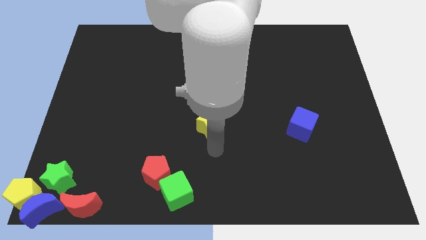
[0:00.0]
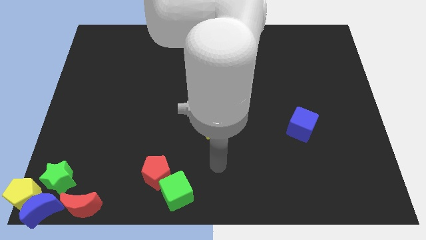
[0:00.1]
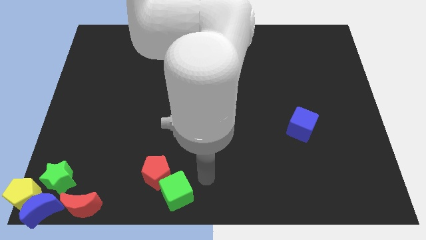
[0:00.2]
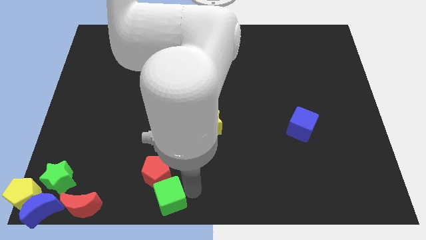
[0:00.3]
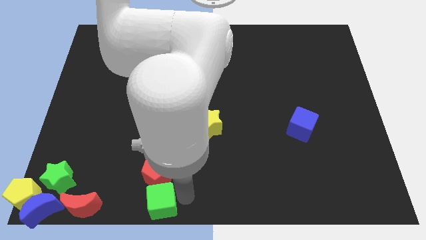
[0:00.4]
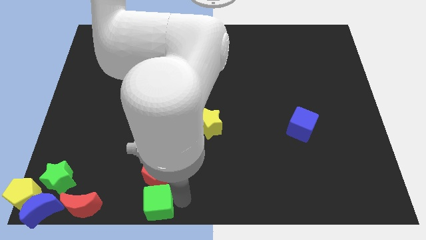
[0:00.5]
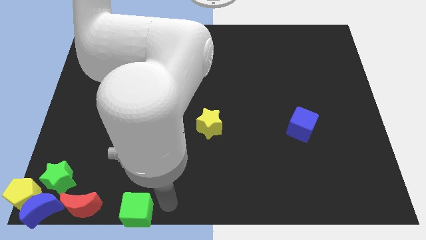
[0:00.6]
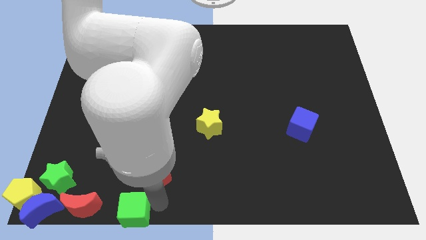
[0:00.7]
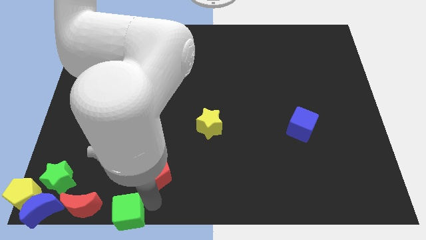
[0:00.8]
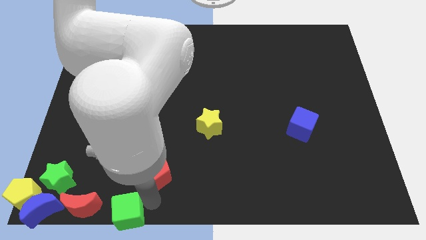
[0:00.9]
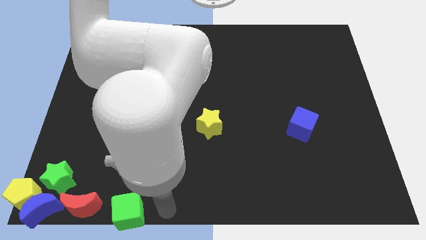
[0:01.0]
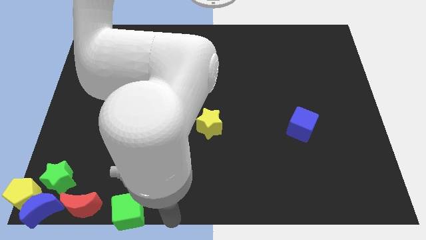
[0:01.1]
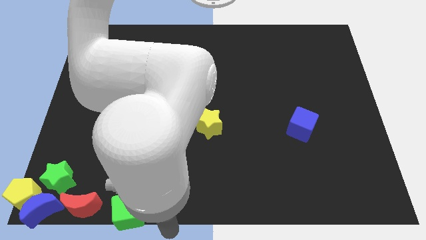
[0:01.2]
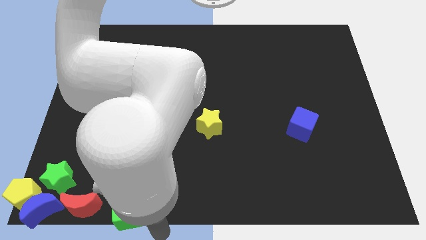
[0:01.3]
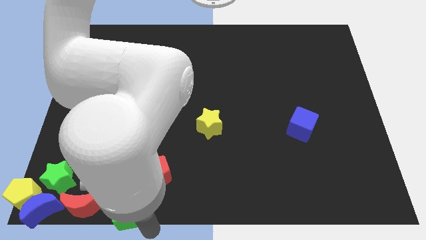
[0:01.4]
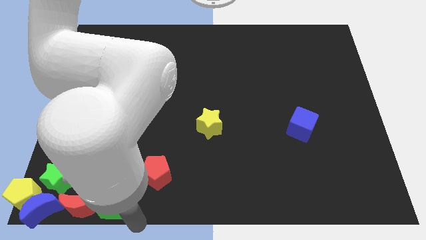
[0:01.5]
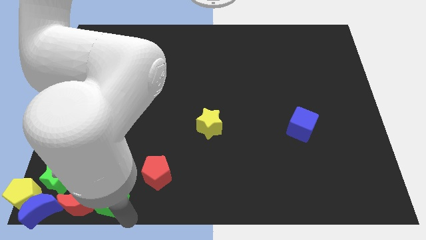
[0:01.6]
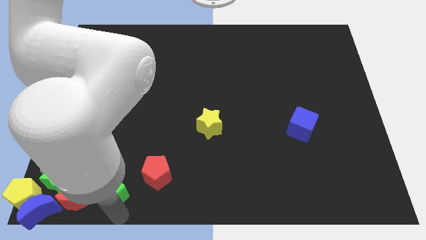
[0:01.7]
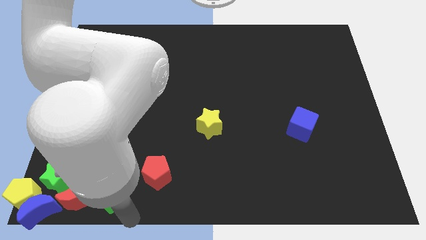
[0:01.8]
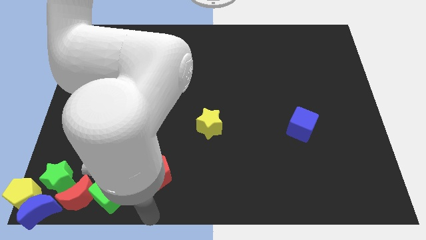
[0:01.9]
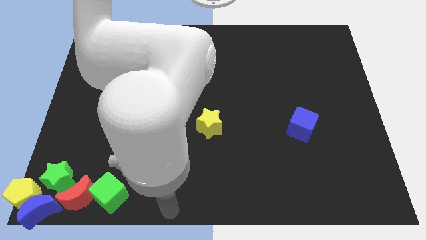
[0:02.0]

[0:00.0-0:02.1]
move the green cube into the group of blocks

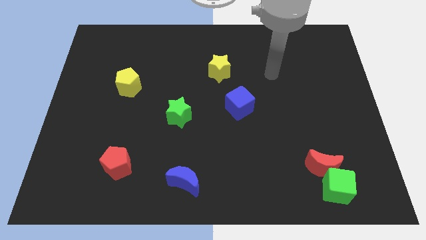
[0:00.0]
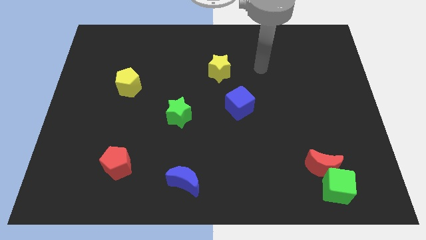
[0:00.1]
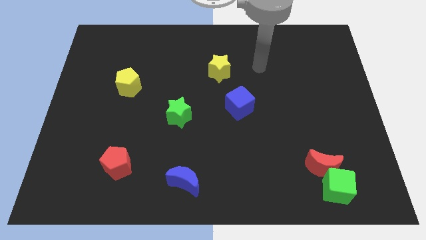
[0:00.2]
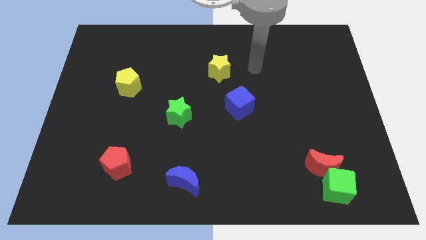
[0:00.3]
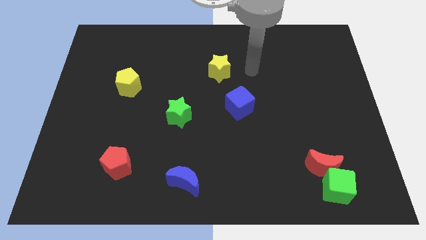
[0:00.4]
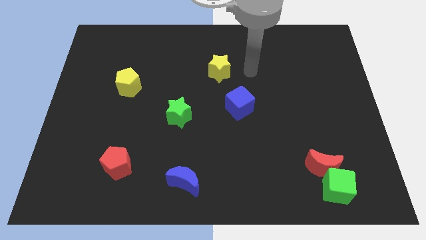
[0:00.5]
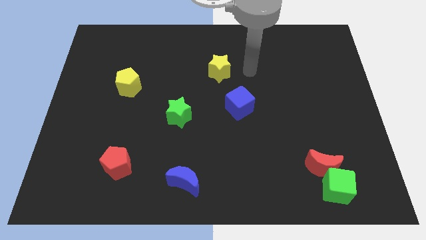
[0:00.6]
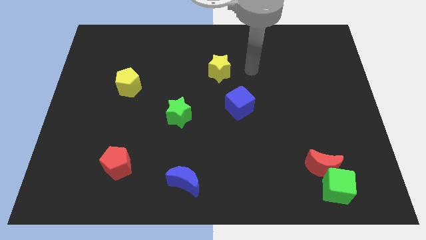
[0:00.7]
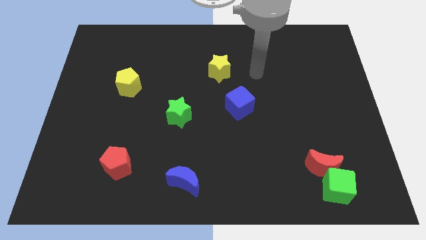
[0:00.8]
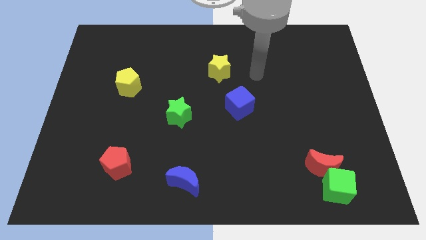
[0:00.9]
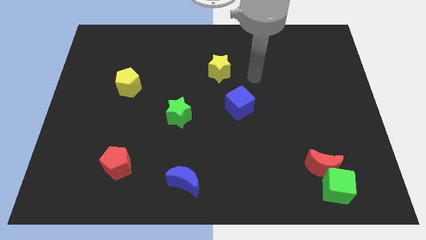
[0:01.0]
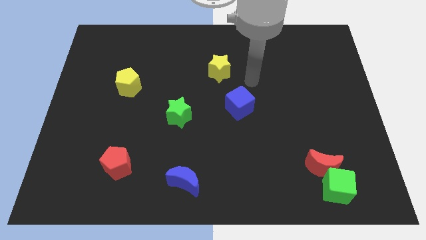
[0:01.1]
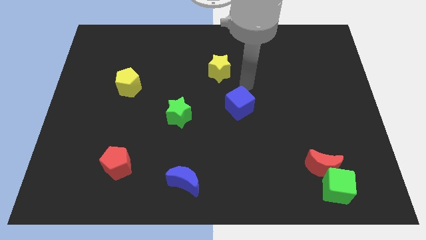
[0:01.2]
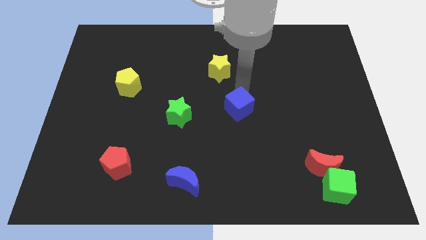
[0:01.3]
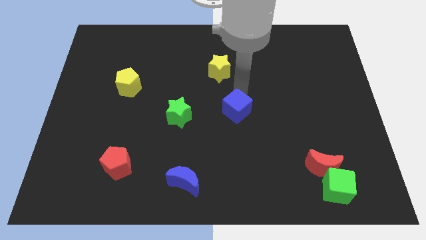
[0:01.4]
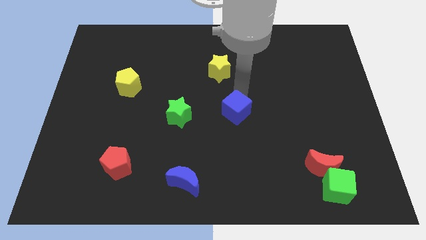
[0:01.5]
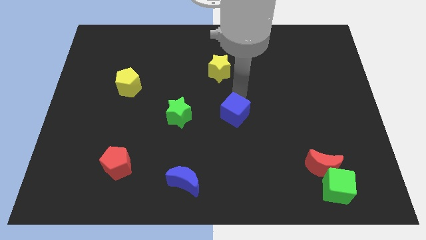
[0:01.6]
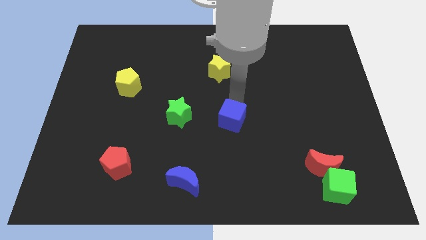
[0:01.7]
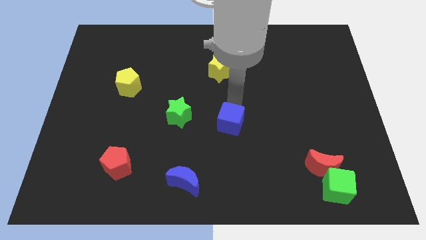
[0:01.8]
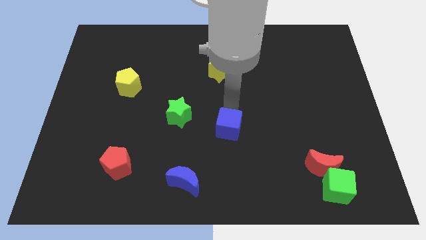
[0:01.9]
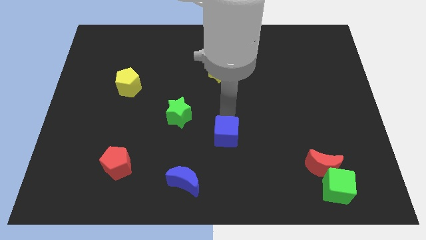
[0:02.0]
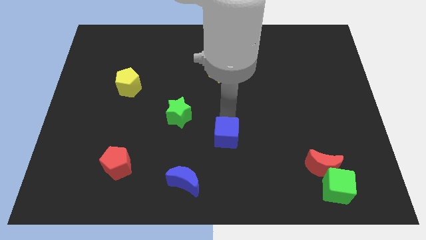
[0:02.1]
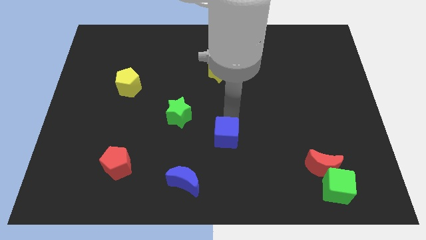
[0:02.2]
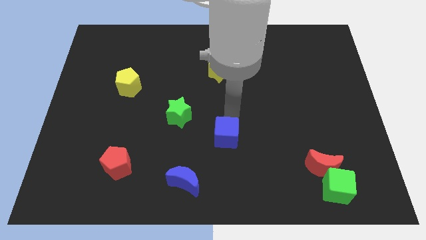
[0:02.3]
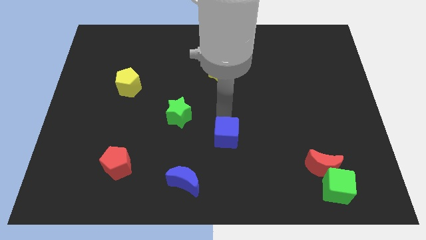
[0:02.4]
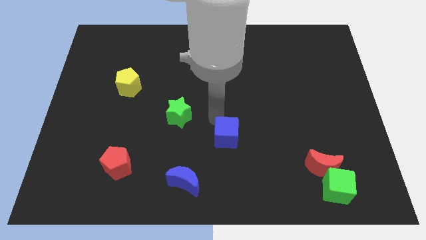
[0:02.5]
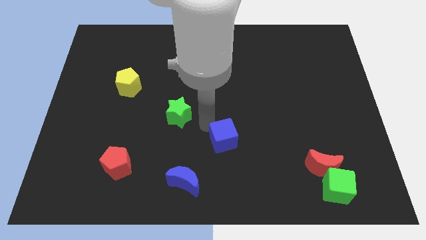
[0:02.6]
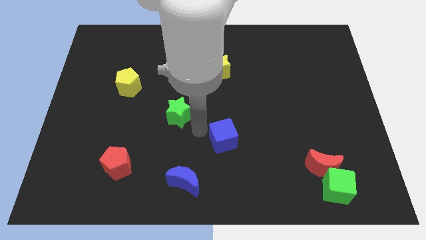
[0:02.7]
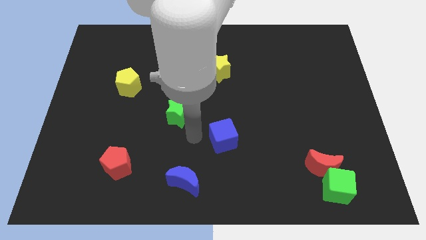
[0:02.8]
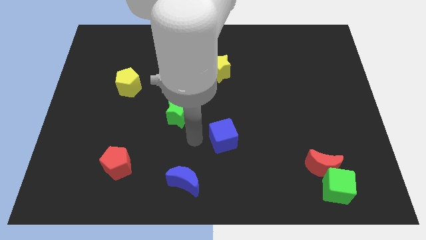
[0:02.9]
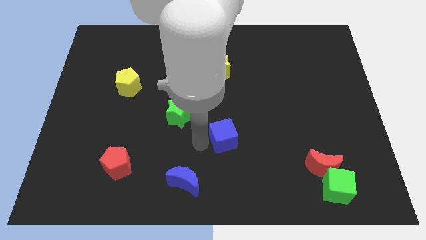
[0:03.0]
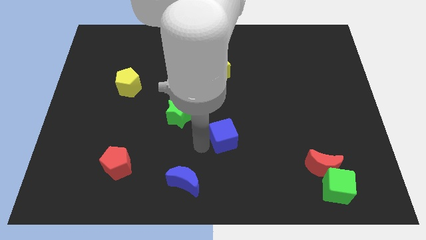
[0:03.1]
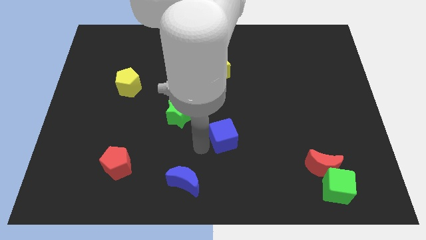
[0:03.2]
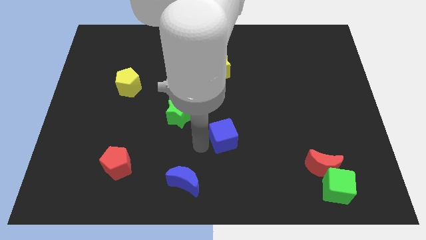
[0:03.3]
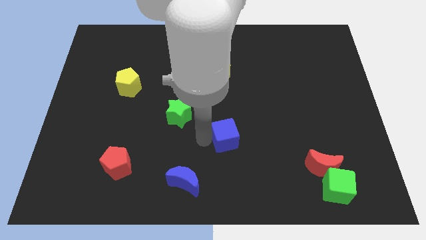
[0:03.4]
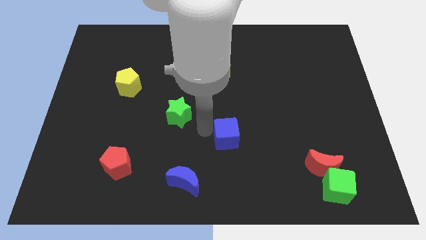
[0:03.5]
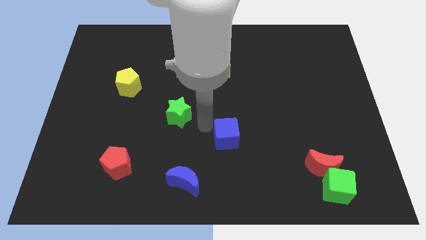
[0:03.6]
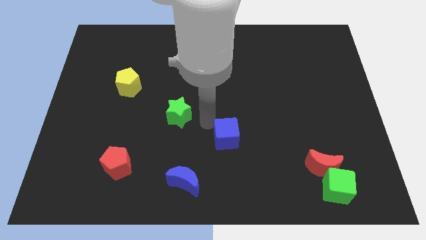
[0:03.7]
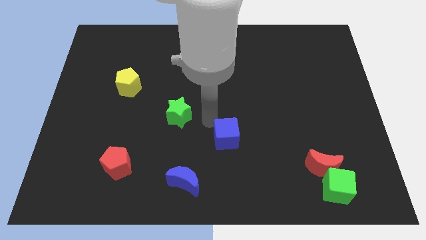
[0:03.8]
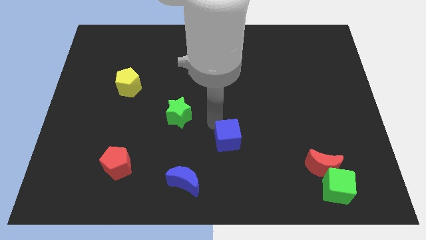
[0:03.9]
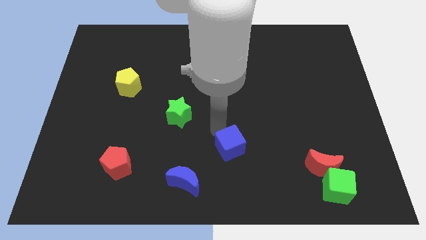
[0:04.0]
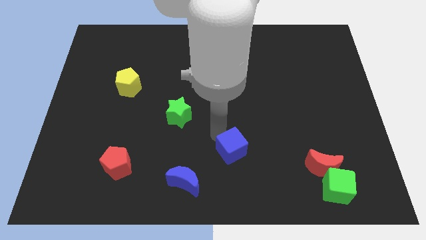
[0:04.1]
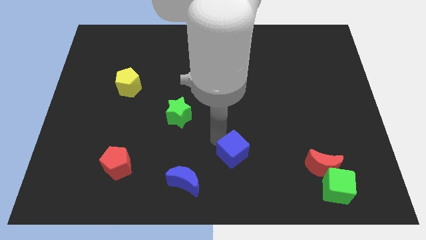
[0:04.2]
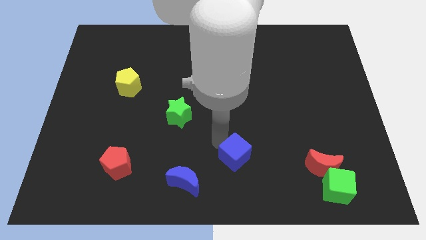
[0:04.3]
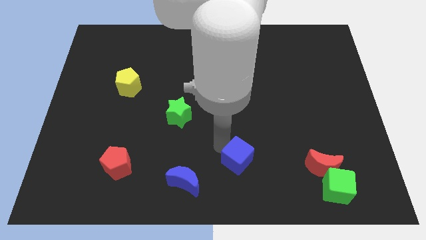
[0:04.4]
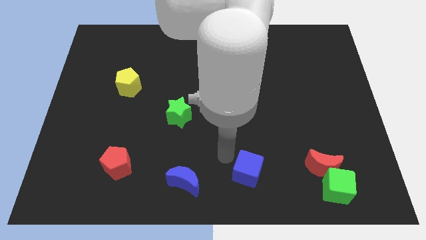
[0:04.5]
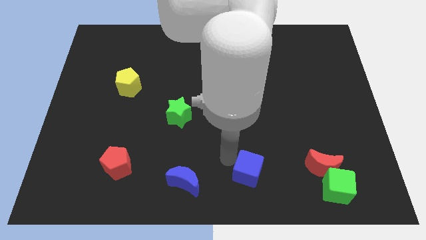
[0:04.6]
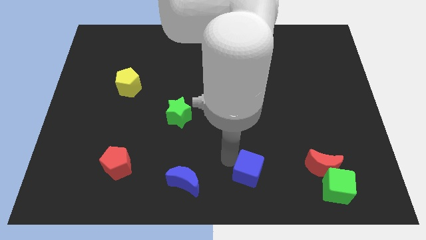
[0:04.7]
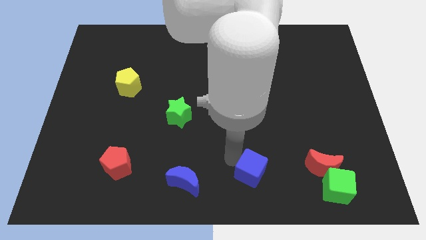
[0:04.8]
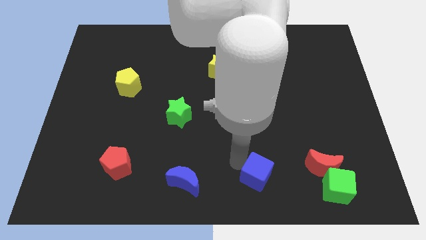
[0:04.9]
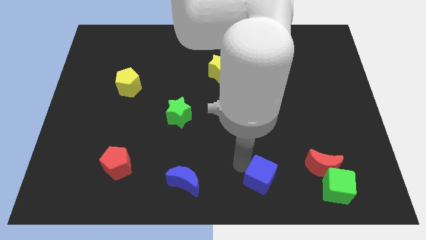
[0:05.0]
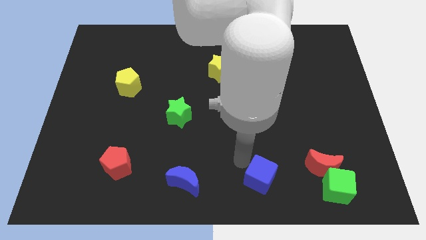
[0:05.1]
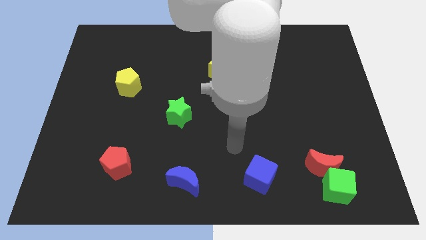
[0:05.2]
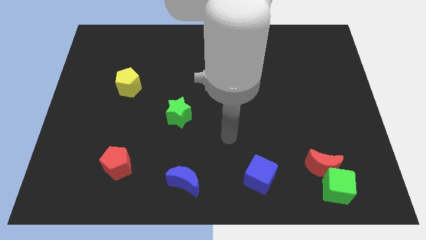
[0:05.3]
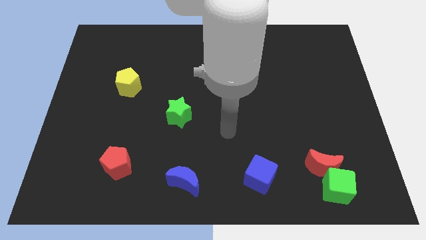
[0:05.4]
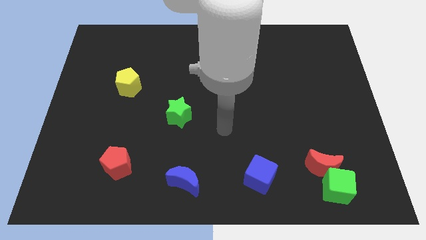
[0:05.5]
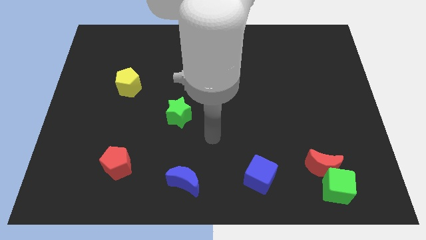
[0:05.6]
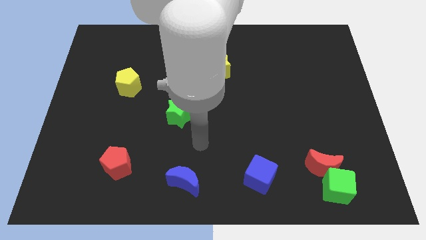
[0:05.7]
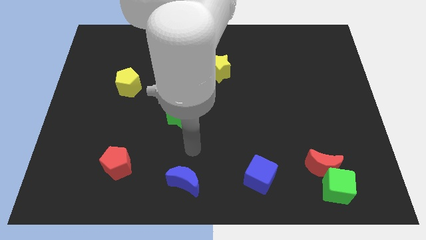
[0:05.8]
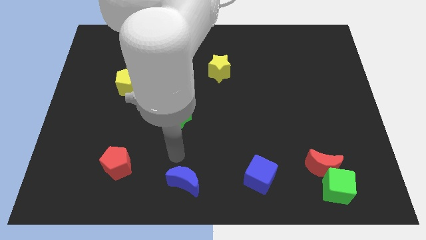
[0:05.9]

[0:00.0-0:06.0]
place the blue cube diagonal to the green star

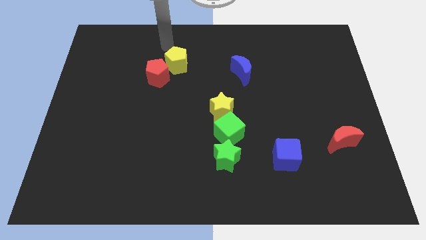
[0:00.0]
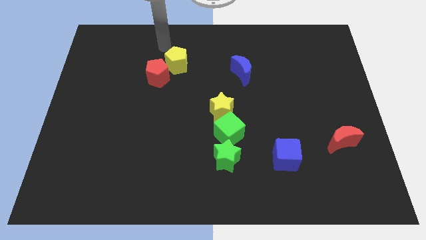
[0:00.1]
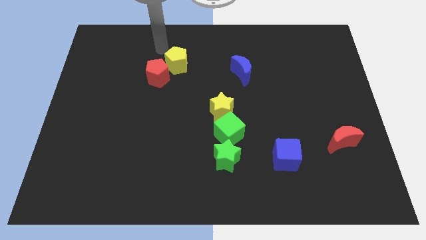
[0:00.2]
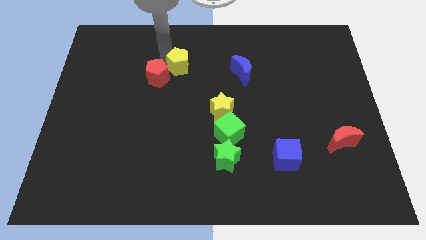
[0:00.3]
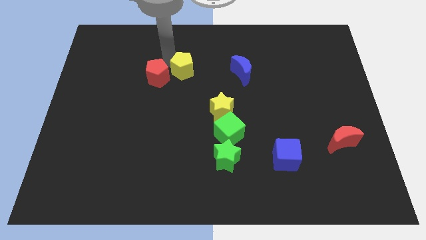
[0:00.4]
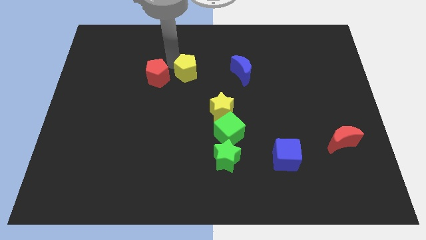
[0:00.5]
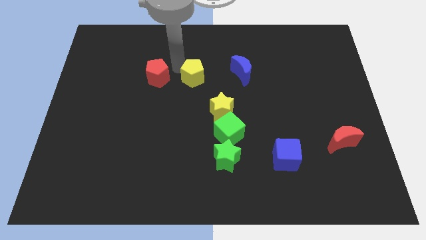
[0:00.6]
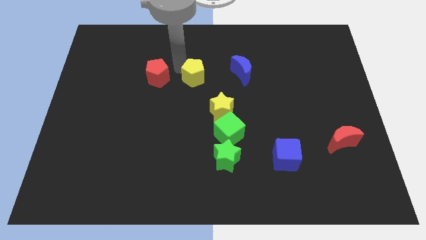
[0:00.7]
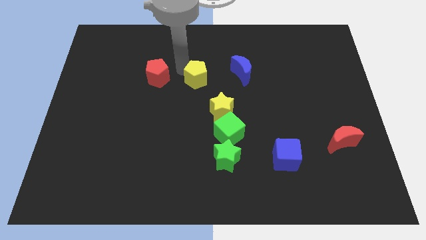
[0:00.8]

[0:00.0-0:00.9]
place the yellow pentagon in between the red pentagon and blue crescent

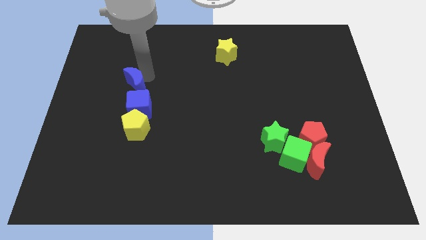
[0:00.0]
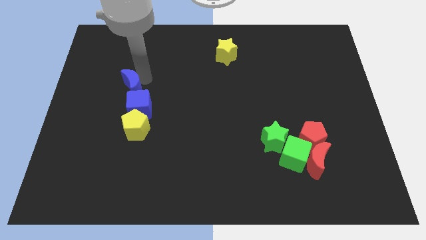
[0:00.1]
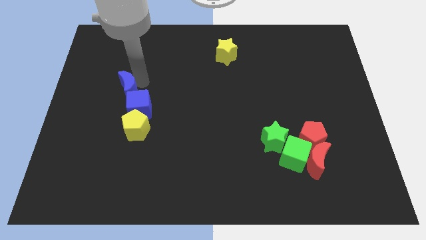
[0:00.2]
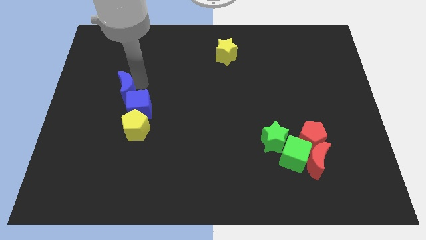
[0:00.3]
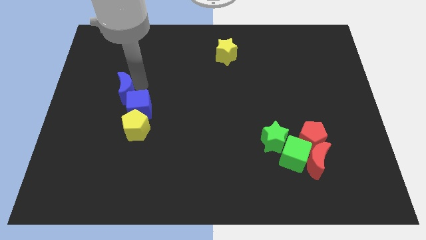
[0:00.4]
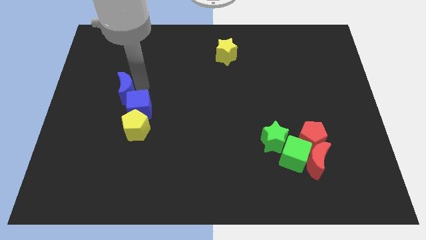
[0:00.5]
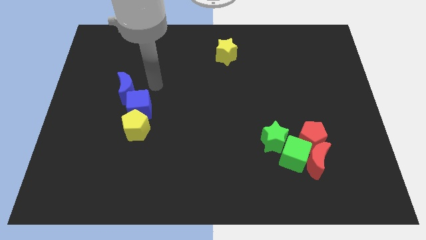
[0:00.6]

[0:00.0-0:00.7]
move the blue cube with the blue moon
